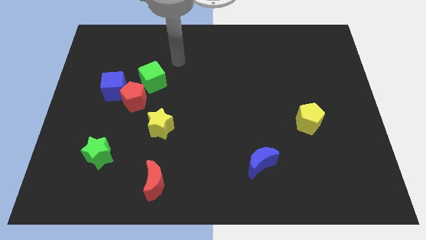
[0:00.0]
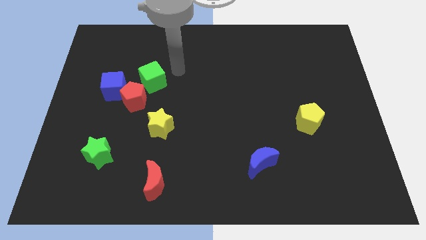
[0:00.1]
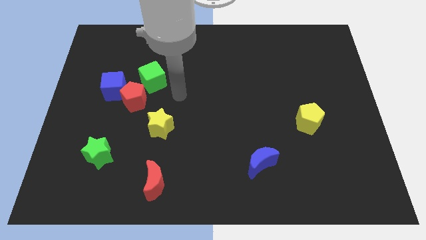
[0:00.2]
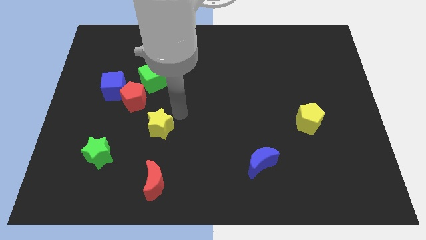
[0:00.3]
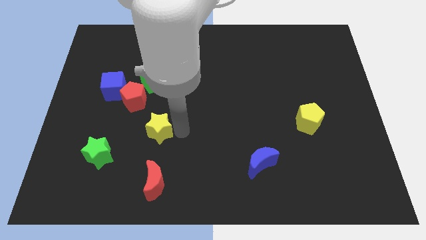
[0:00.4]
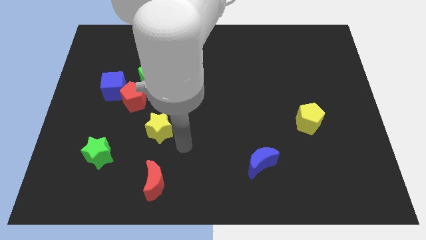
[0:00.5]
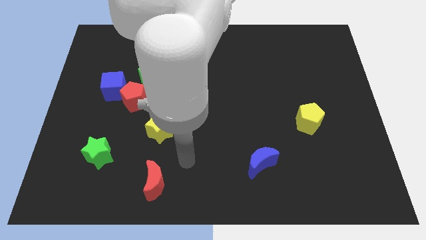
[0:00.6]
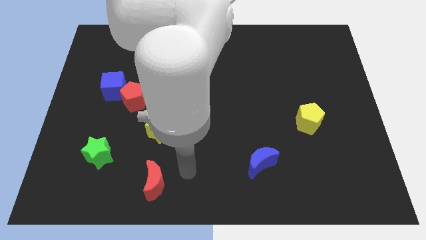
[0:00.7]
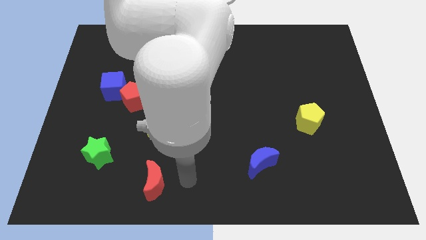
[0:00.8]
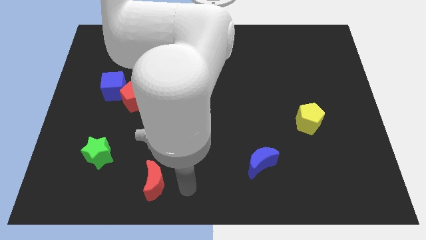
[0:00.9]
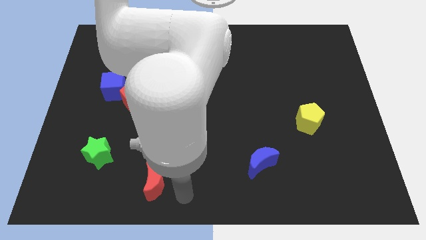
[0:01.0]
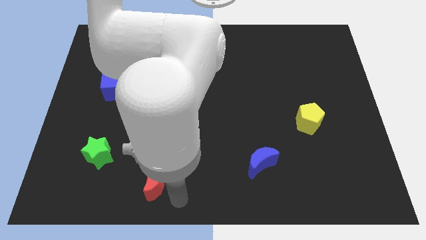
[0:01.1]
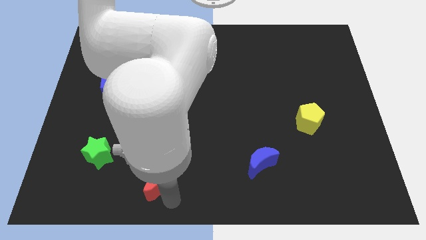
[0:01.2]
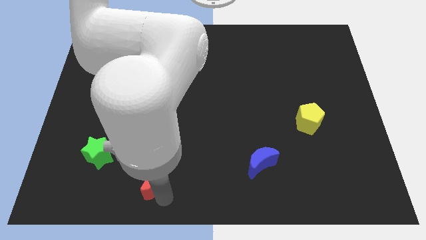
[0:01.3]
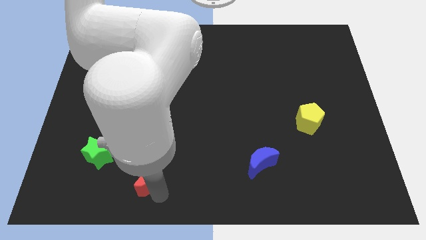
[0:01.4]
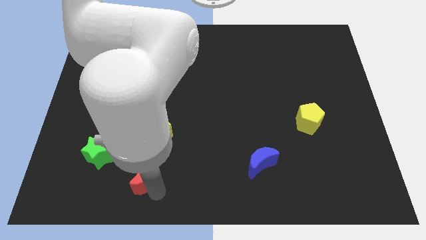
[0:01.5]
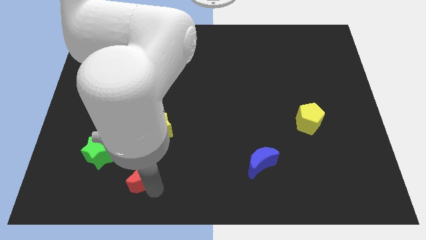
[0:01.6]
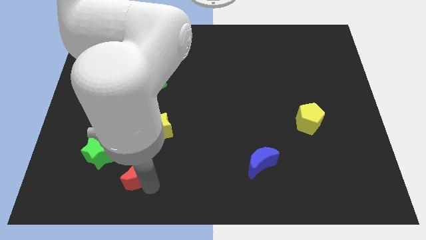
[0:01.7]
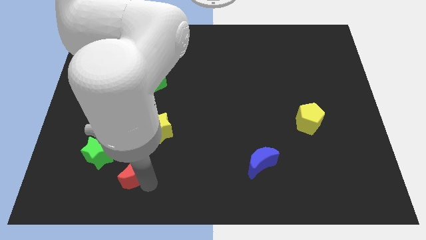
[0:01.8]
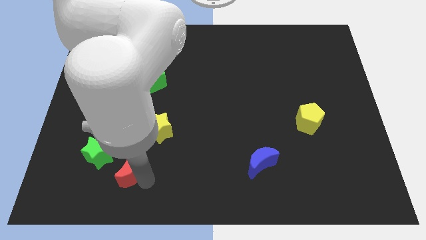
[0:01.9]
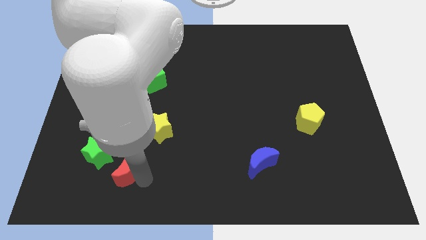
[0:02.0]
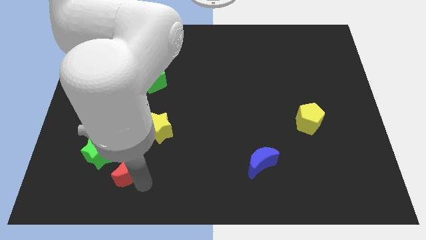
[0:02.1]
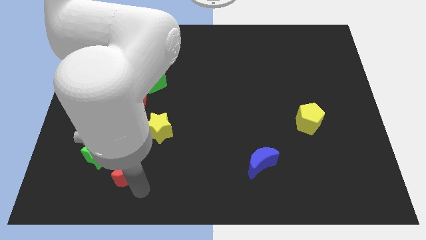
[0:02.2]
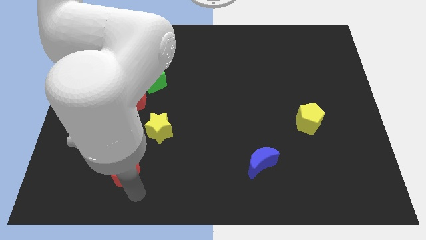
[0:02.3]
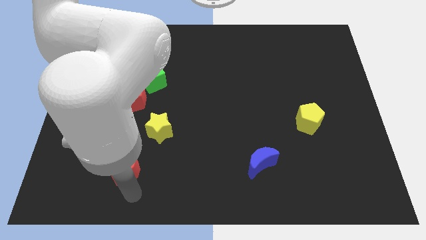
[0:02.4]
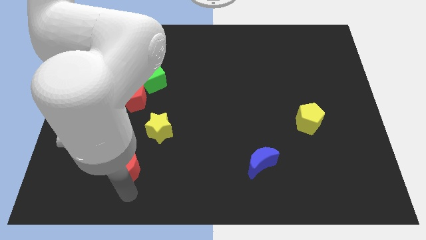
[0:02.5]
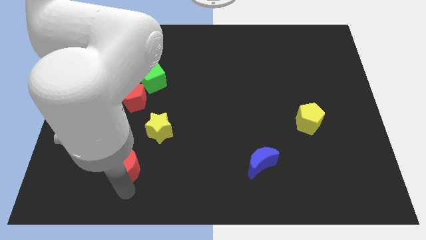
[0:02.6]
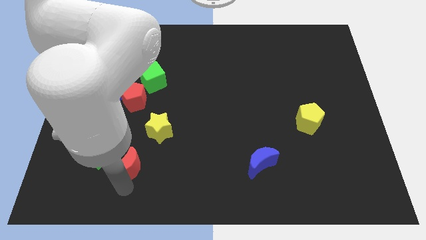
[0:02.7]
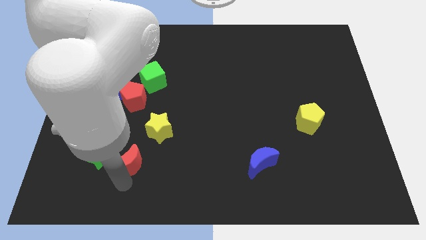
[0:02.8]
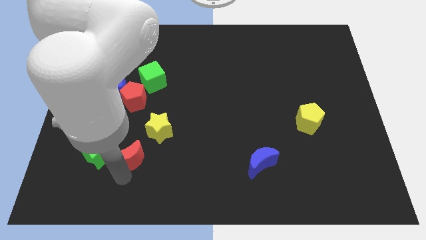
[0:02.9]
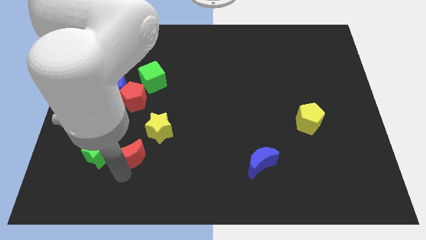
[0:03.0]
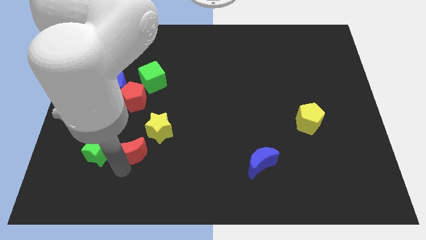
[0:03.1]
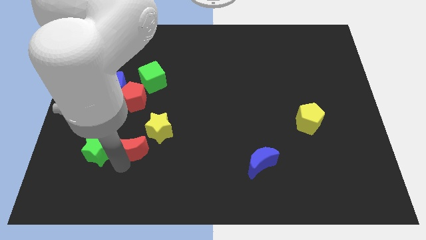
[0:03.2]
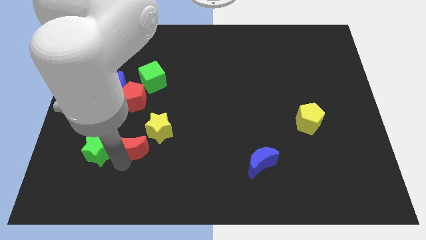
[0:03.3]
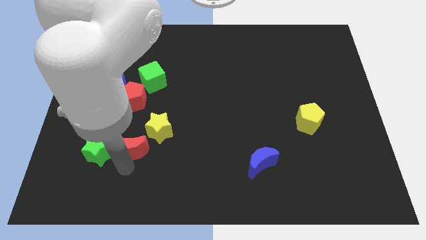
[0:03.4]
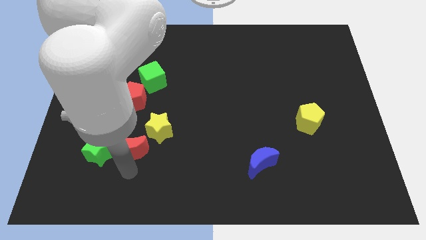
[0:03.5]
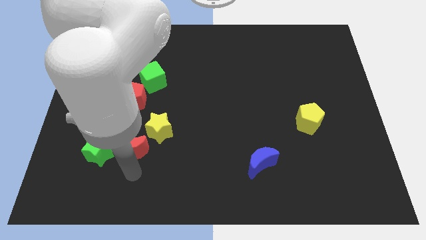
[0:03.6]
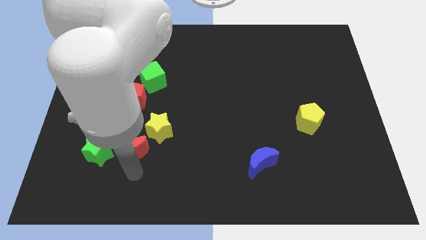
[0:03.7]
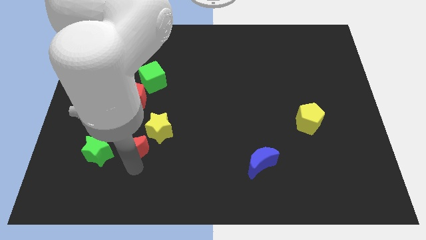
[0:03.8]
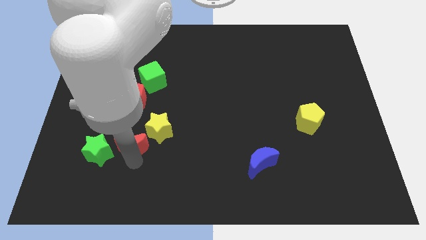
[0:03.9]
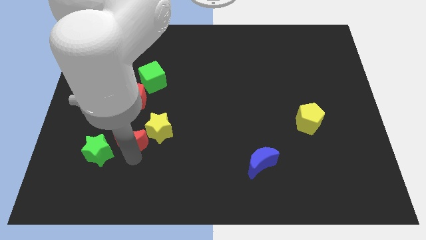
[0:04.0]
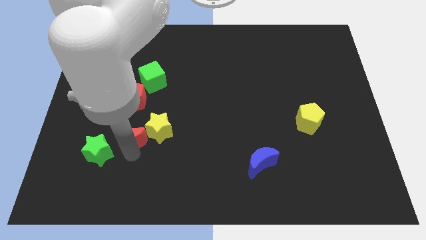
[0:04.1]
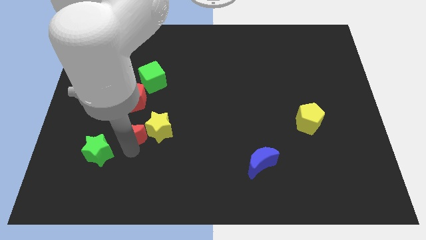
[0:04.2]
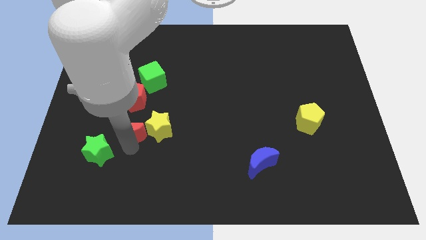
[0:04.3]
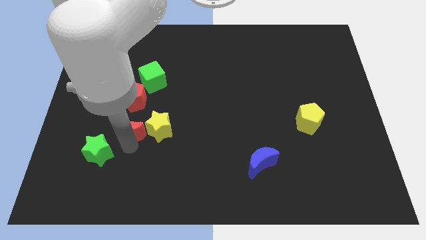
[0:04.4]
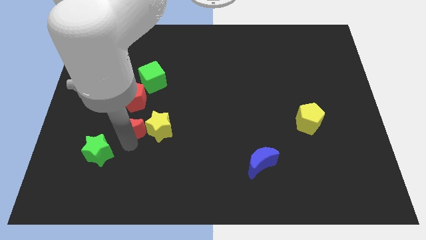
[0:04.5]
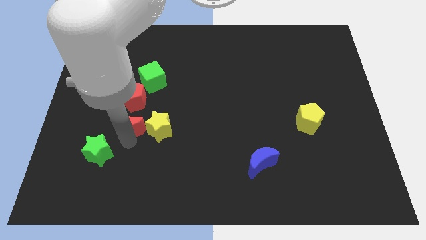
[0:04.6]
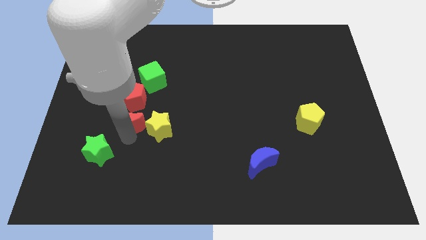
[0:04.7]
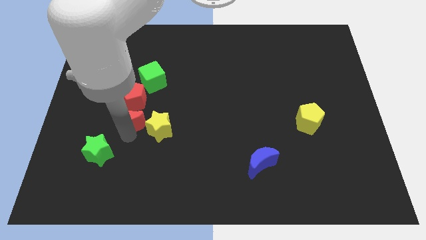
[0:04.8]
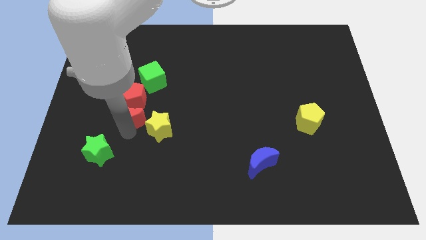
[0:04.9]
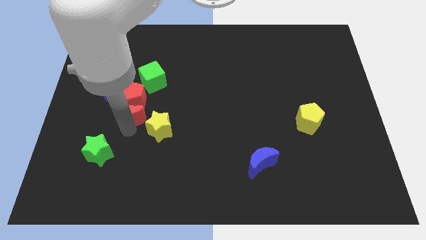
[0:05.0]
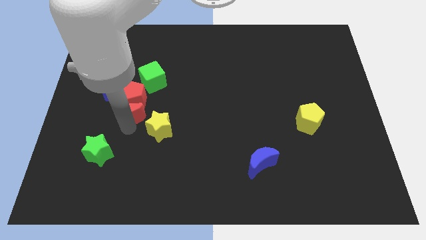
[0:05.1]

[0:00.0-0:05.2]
push the red moon towards the red pentagon

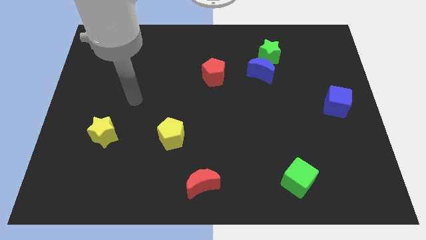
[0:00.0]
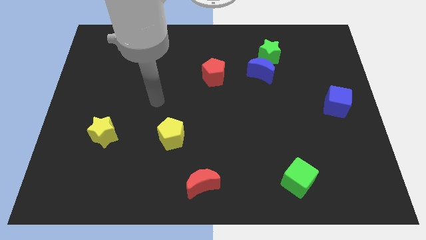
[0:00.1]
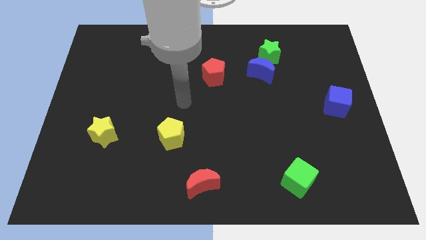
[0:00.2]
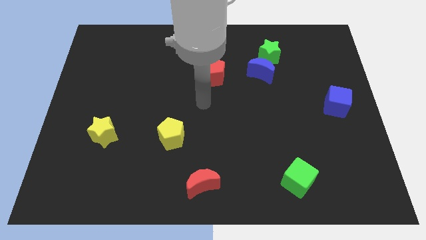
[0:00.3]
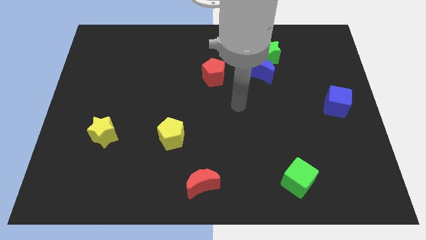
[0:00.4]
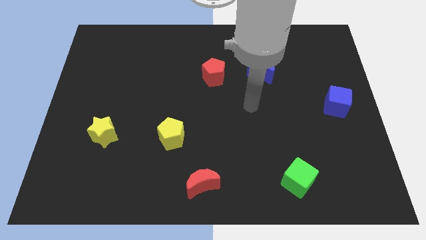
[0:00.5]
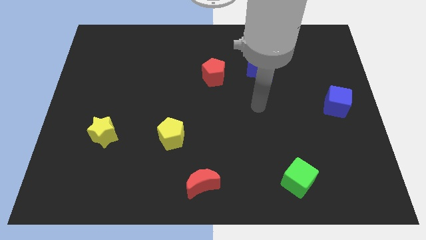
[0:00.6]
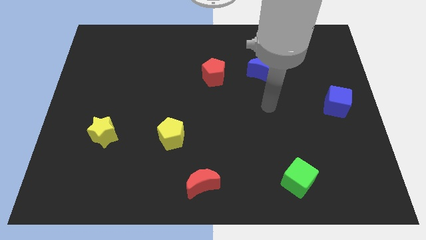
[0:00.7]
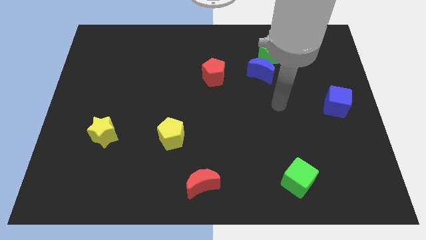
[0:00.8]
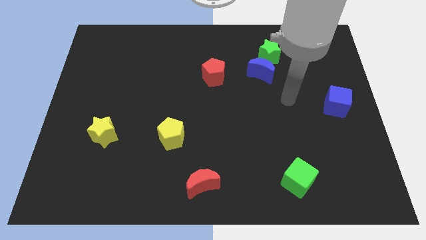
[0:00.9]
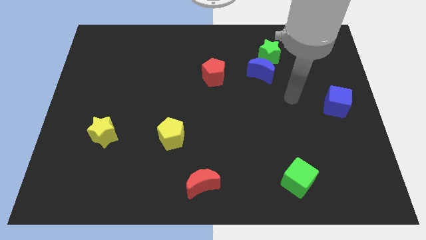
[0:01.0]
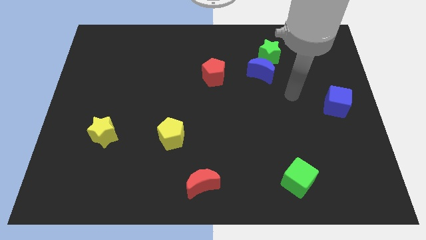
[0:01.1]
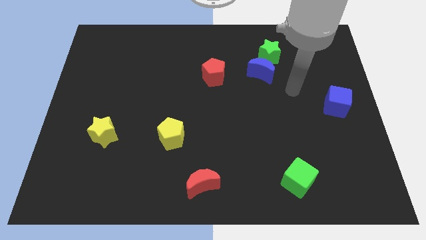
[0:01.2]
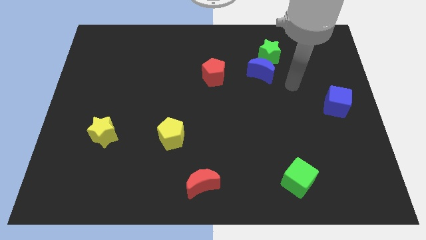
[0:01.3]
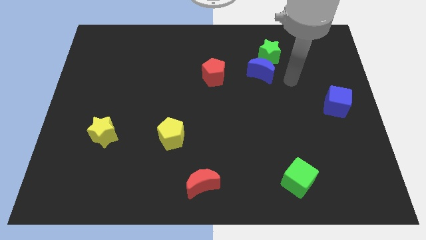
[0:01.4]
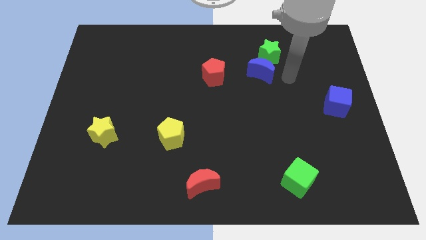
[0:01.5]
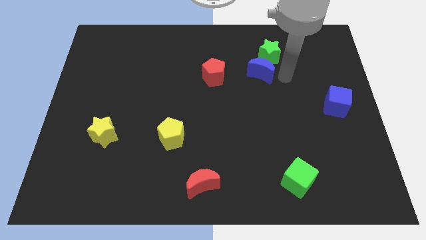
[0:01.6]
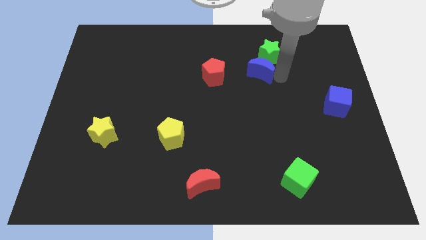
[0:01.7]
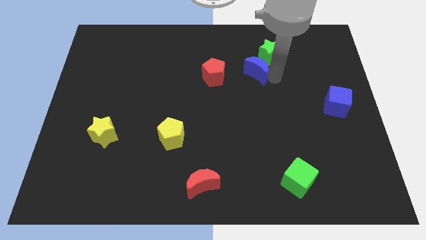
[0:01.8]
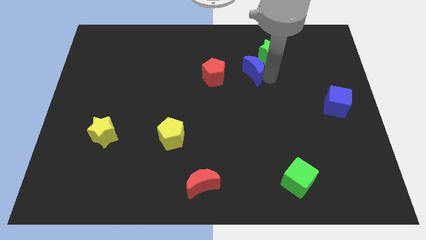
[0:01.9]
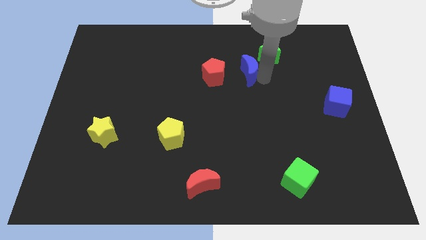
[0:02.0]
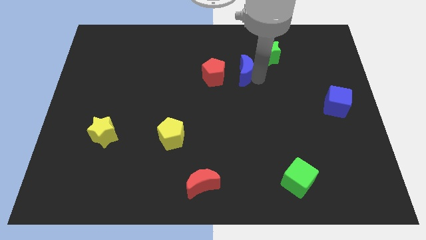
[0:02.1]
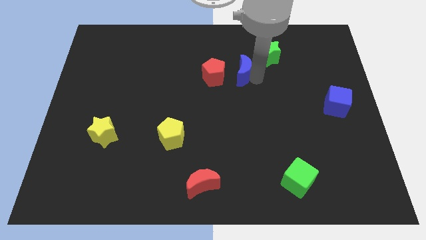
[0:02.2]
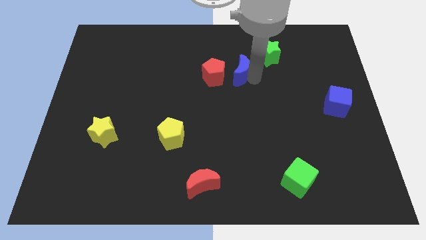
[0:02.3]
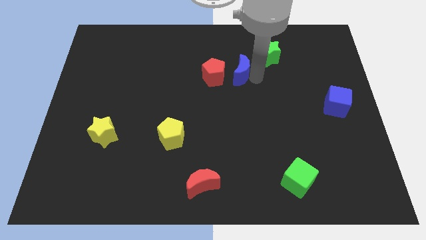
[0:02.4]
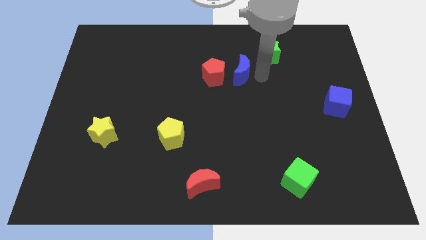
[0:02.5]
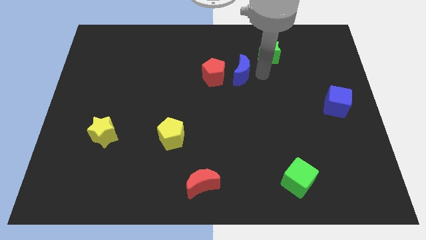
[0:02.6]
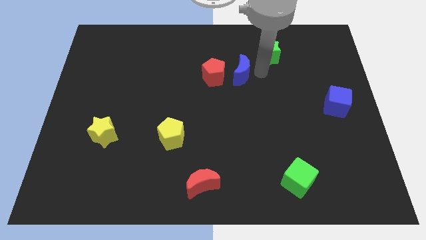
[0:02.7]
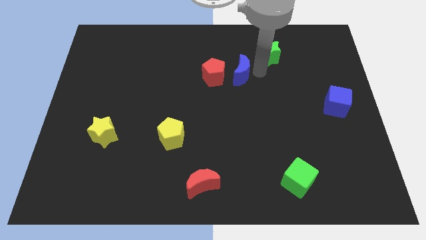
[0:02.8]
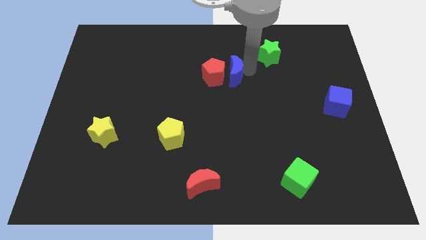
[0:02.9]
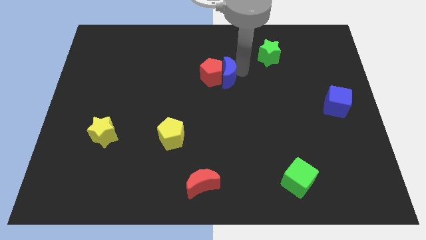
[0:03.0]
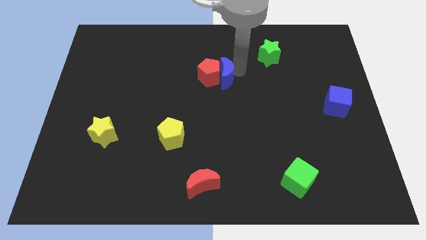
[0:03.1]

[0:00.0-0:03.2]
move the blue moon next to the red pentagon
